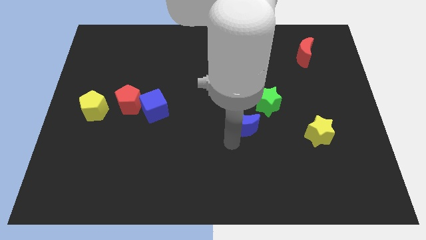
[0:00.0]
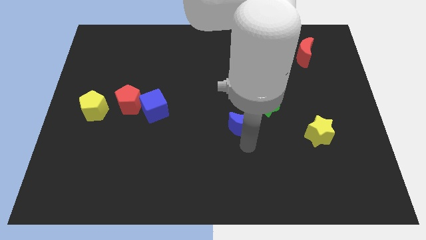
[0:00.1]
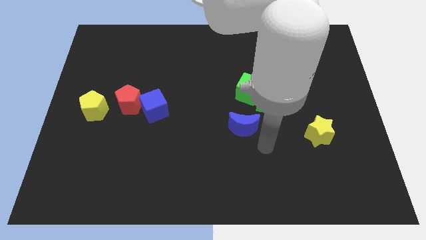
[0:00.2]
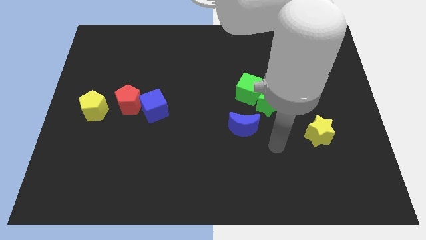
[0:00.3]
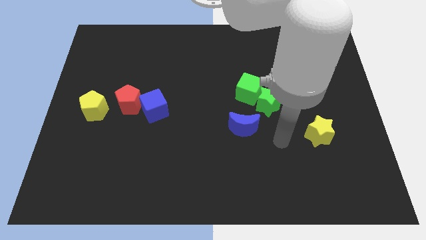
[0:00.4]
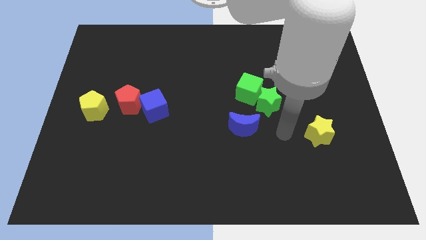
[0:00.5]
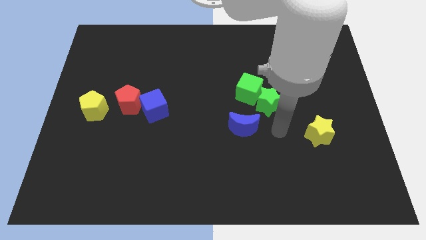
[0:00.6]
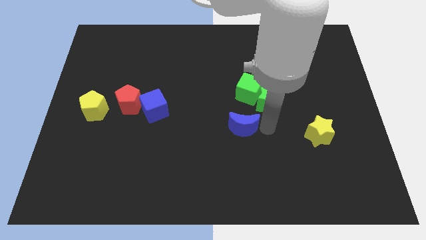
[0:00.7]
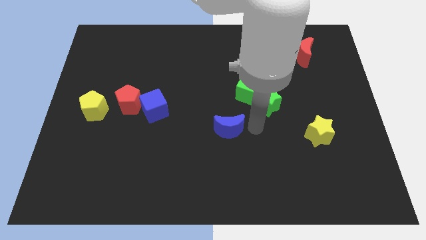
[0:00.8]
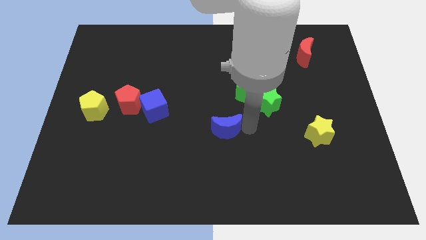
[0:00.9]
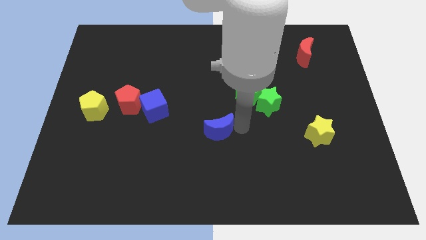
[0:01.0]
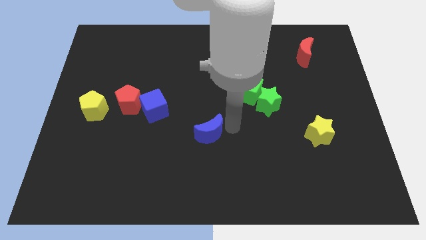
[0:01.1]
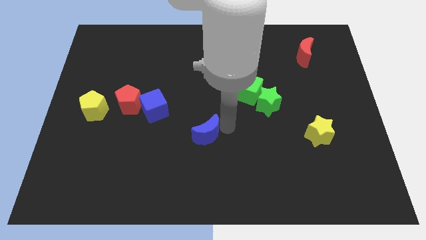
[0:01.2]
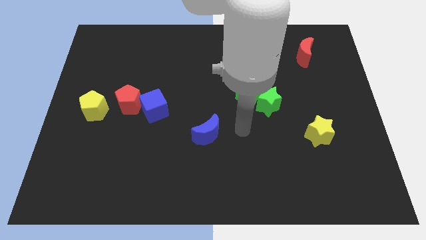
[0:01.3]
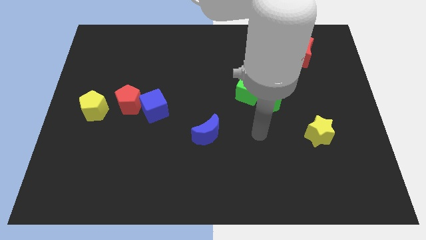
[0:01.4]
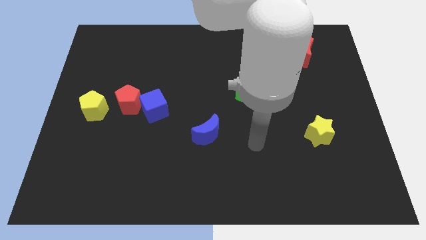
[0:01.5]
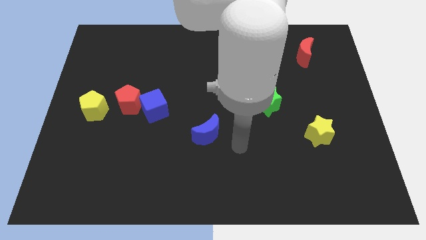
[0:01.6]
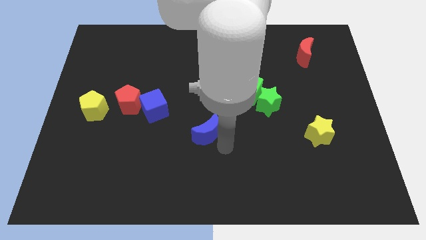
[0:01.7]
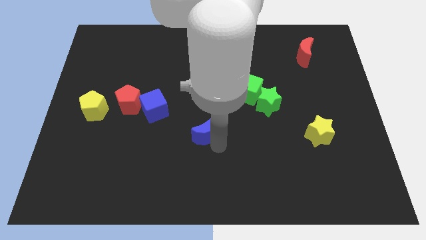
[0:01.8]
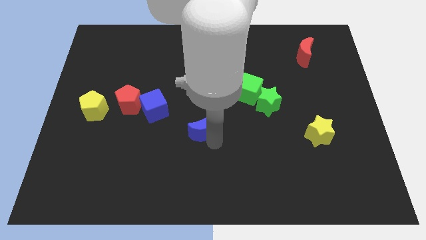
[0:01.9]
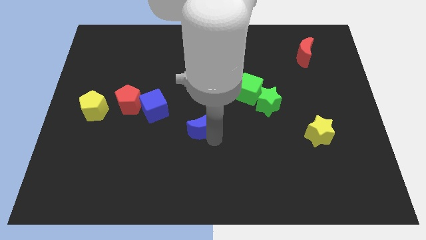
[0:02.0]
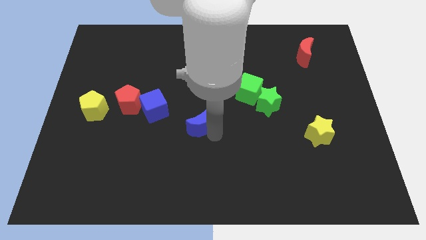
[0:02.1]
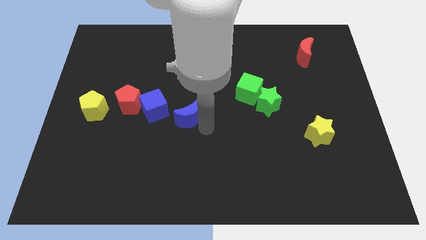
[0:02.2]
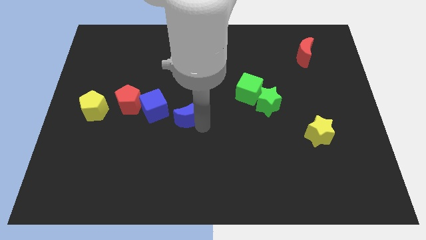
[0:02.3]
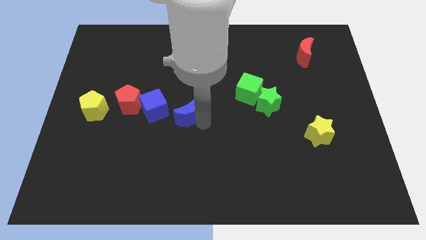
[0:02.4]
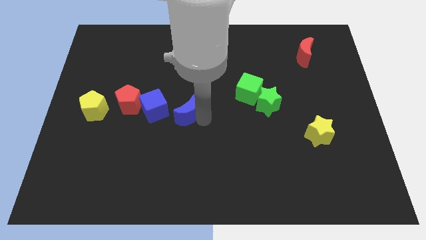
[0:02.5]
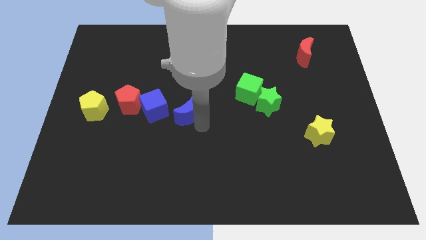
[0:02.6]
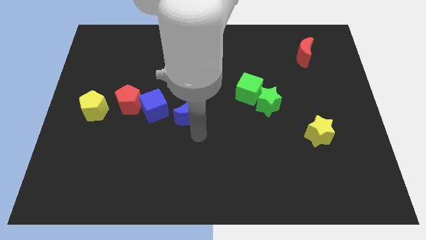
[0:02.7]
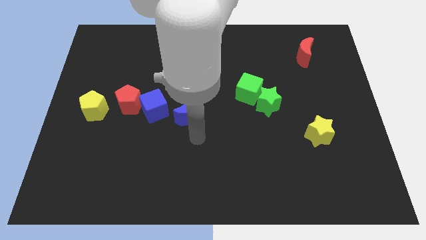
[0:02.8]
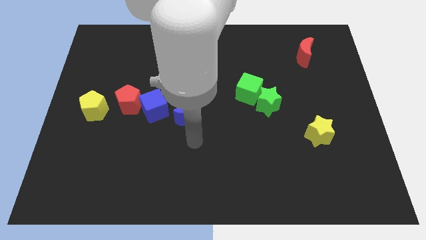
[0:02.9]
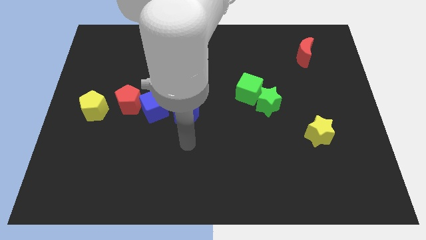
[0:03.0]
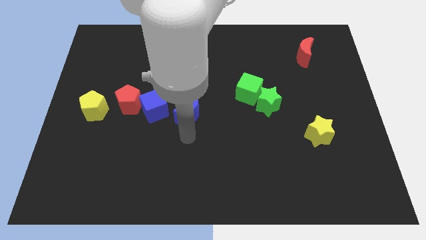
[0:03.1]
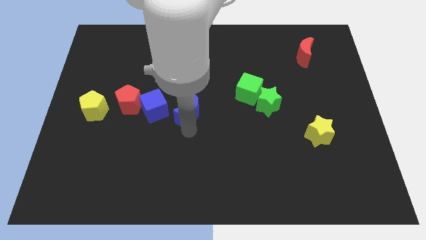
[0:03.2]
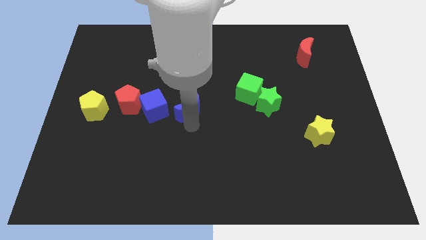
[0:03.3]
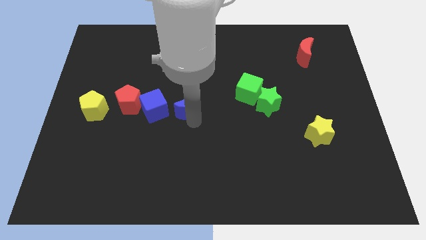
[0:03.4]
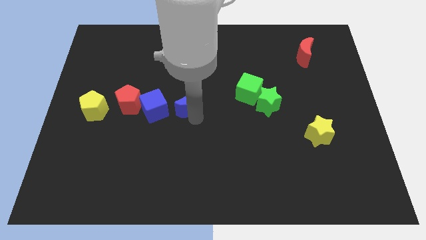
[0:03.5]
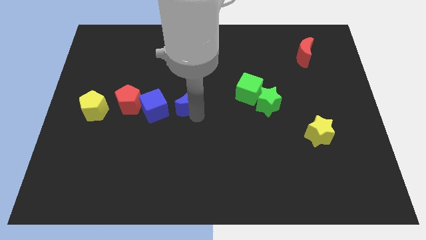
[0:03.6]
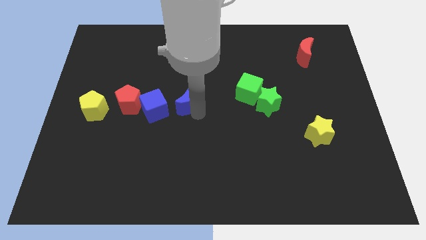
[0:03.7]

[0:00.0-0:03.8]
push the blue crescent to the right of the blue cube

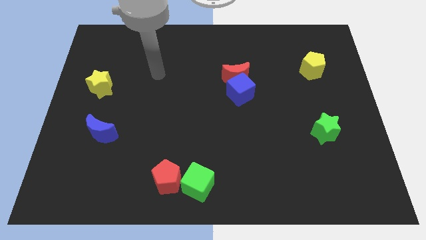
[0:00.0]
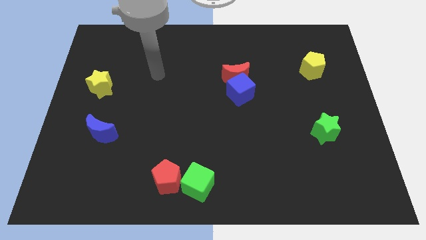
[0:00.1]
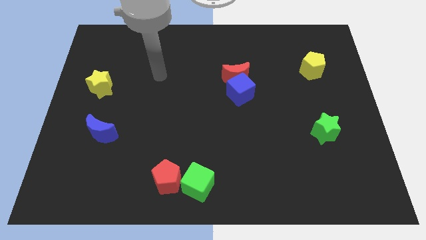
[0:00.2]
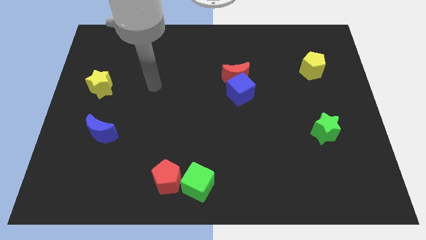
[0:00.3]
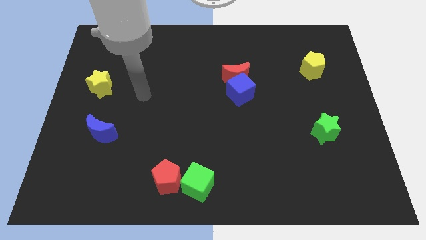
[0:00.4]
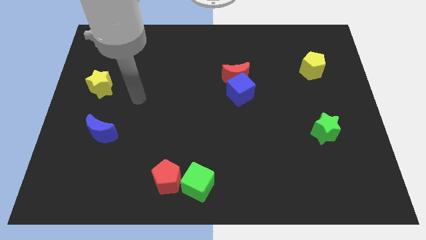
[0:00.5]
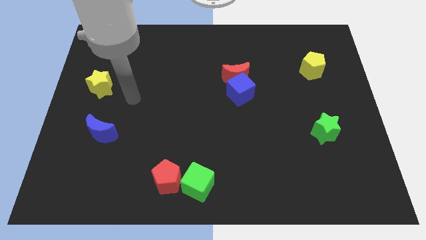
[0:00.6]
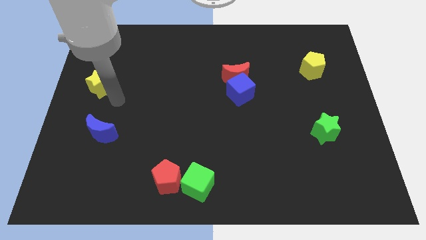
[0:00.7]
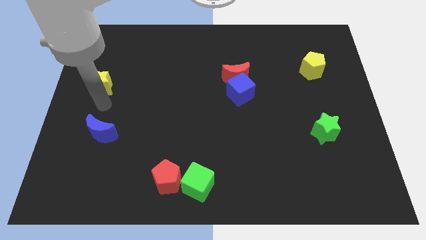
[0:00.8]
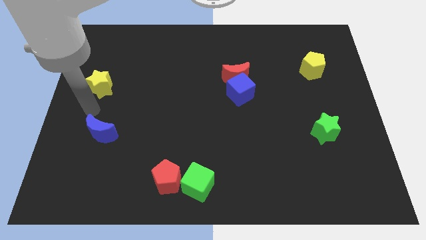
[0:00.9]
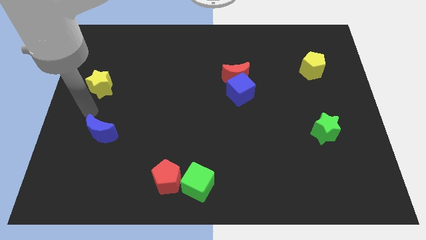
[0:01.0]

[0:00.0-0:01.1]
move your hand close to blue crescent

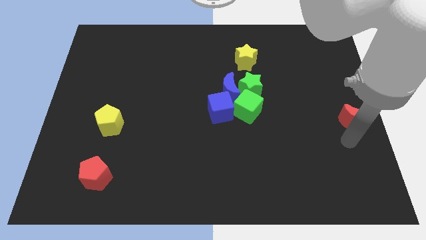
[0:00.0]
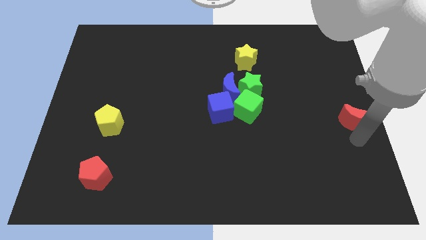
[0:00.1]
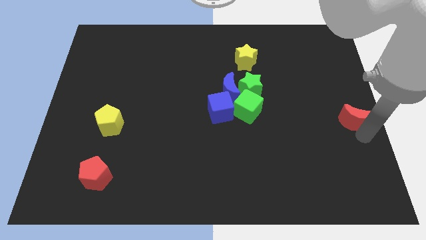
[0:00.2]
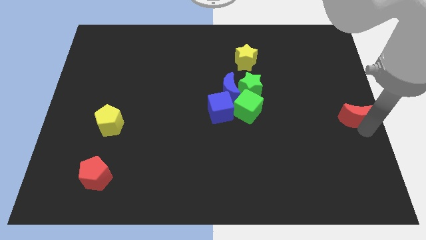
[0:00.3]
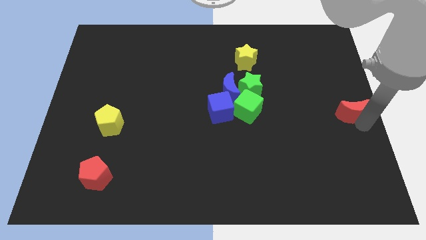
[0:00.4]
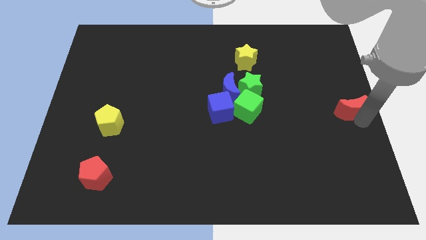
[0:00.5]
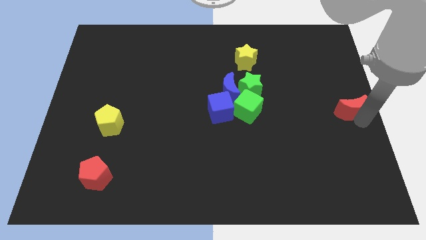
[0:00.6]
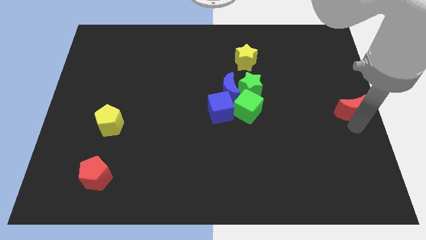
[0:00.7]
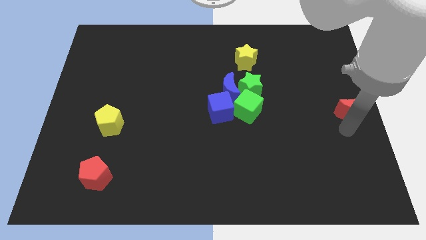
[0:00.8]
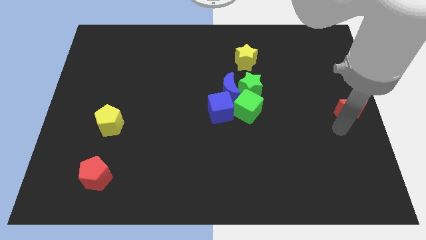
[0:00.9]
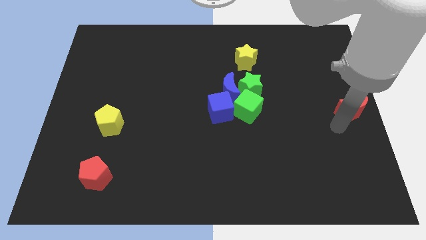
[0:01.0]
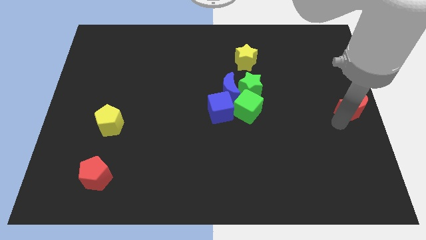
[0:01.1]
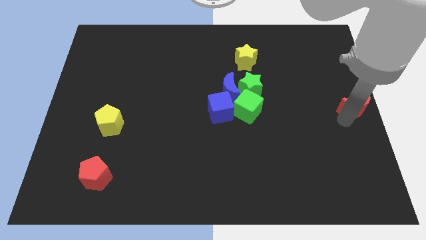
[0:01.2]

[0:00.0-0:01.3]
push the red crescent right center of the board

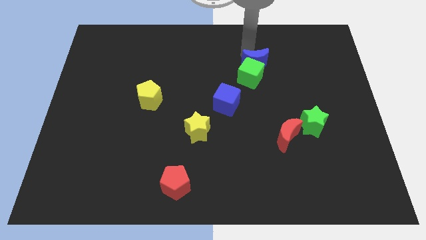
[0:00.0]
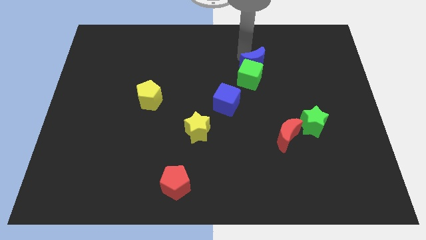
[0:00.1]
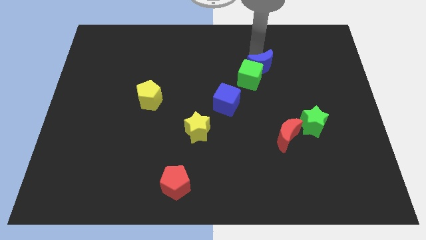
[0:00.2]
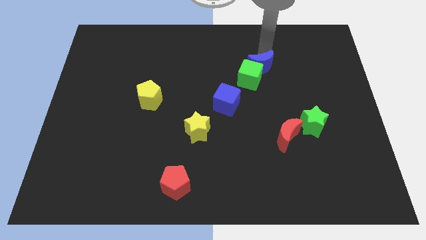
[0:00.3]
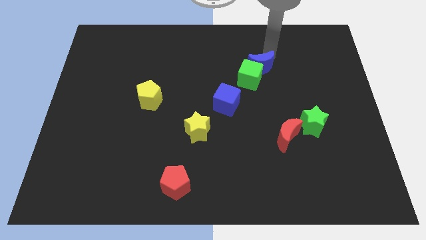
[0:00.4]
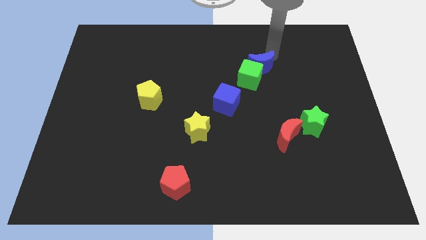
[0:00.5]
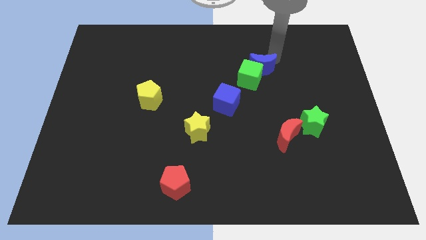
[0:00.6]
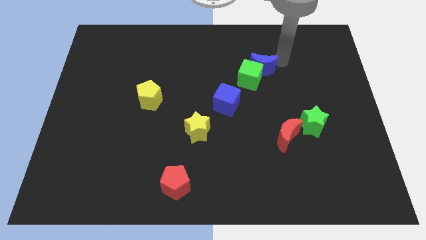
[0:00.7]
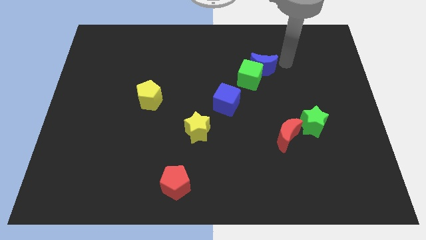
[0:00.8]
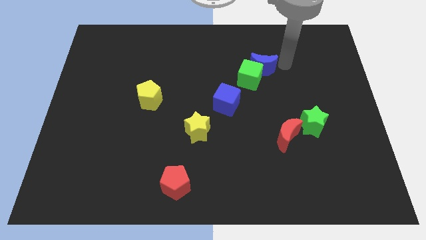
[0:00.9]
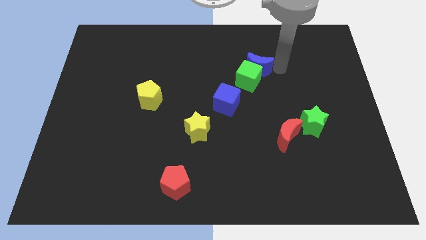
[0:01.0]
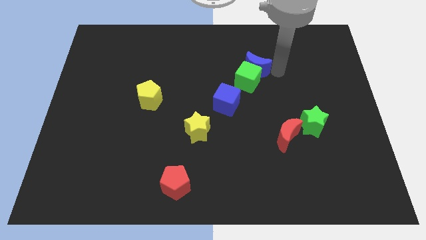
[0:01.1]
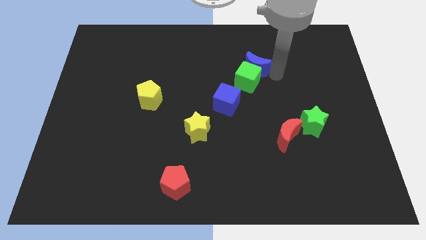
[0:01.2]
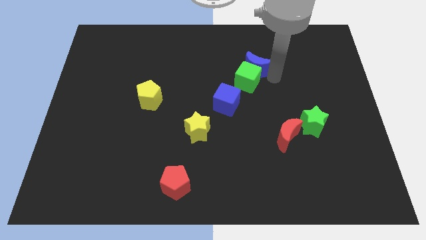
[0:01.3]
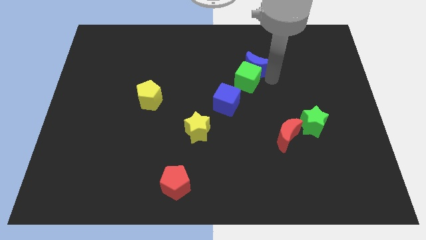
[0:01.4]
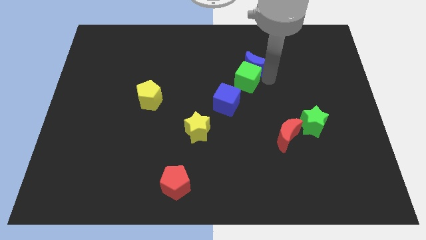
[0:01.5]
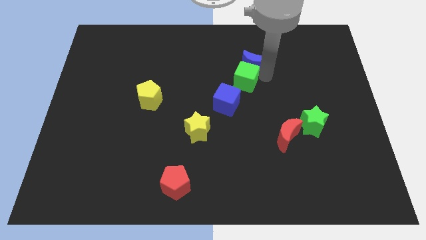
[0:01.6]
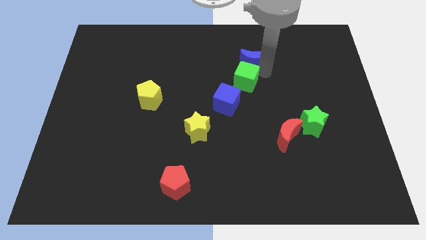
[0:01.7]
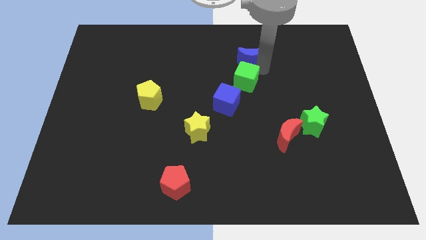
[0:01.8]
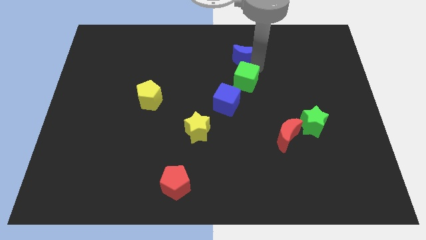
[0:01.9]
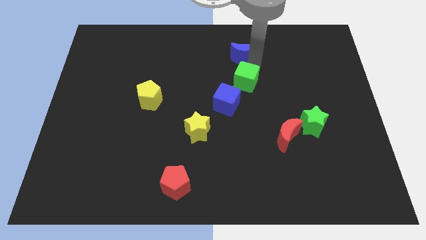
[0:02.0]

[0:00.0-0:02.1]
separate the blue moon and green cube

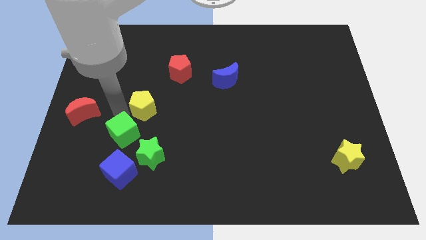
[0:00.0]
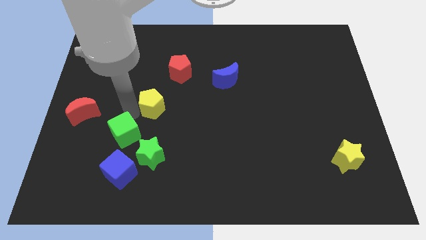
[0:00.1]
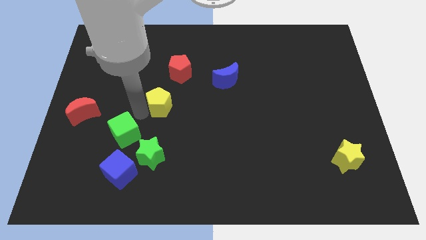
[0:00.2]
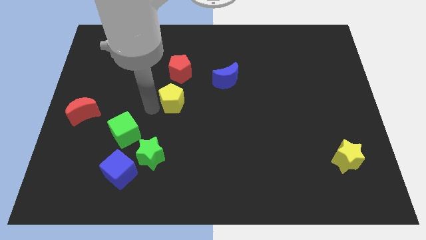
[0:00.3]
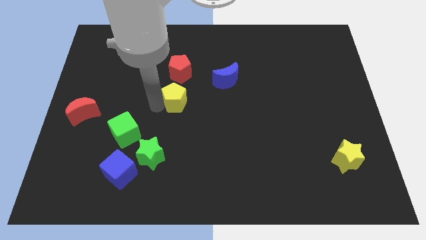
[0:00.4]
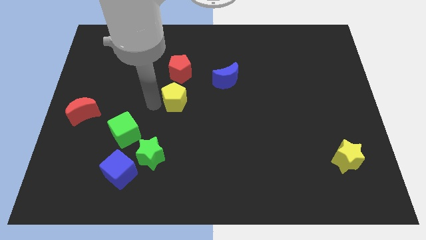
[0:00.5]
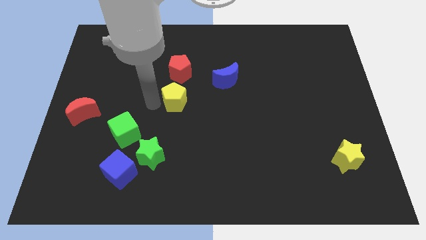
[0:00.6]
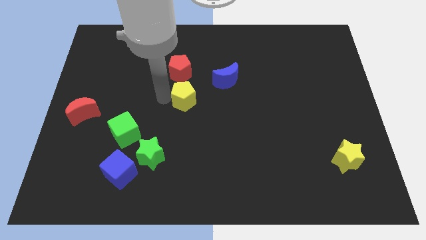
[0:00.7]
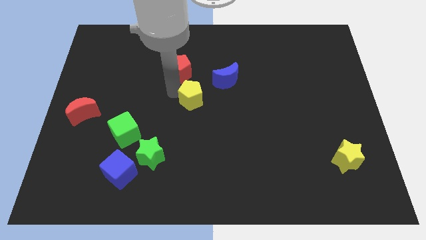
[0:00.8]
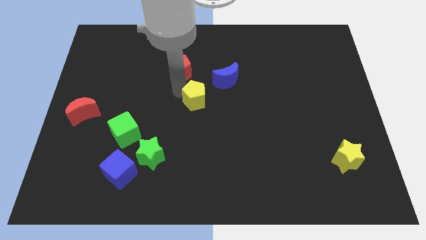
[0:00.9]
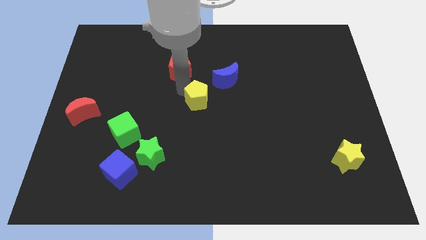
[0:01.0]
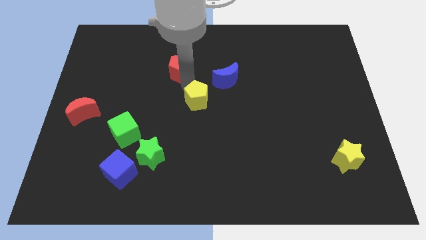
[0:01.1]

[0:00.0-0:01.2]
place the yellow pentagon below the red pentagon
